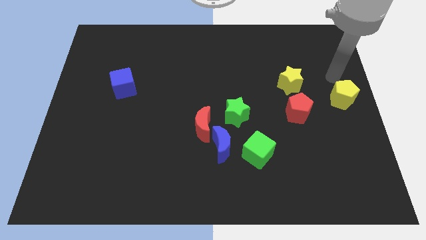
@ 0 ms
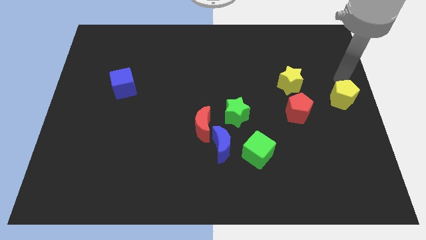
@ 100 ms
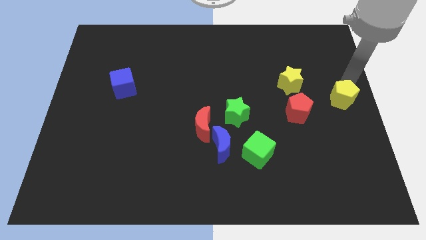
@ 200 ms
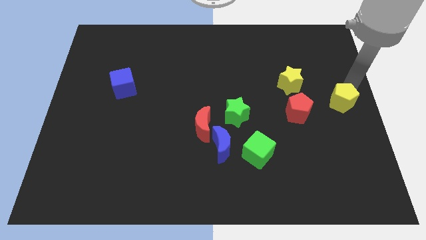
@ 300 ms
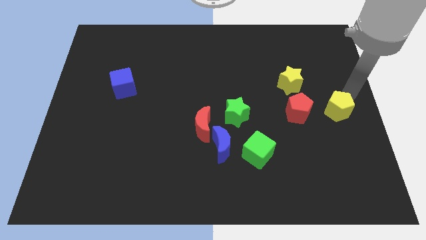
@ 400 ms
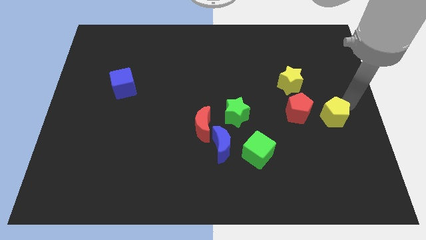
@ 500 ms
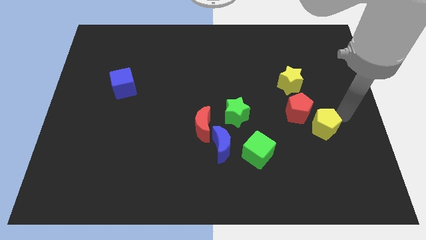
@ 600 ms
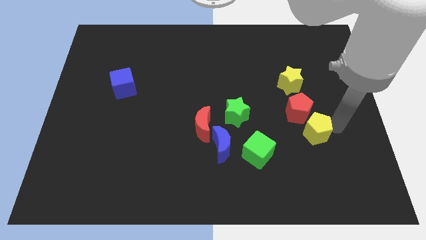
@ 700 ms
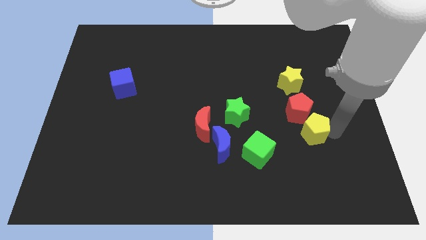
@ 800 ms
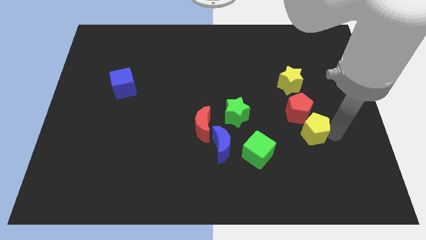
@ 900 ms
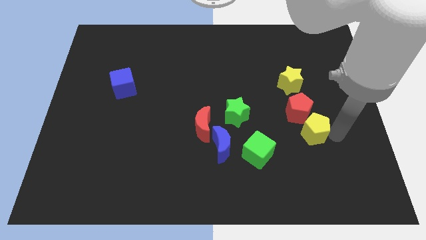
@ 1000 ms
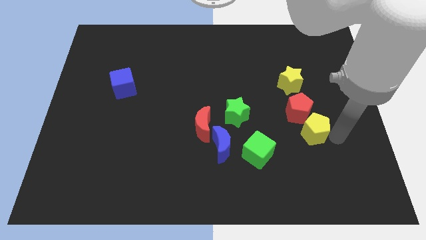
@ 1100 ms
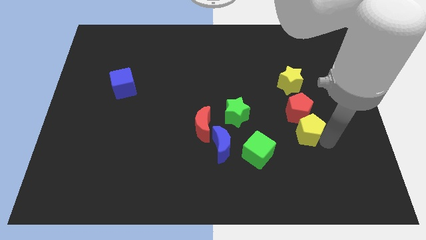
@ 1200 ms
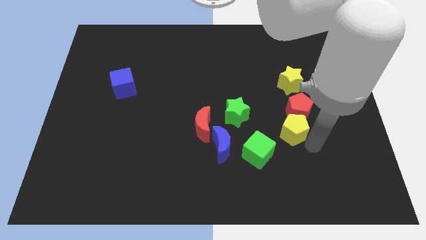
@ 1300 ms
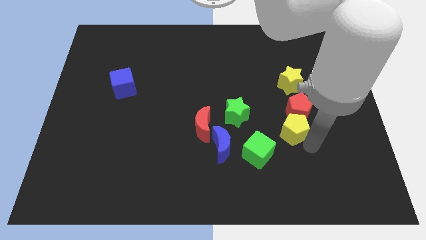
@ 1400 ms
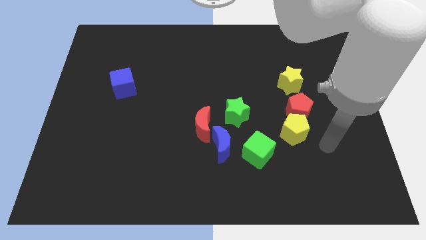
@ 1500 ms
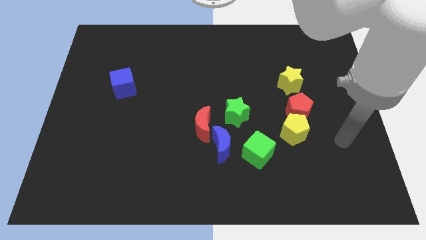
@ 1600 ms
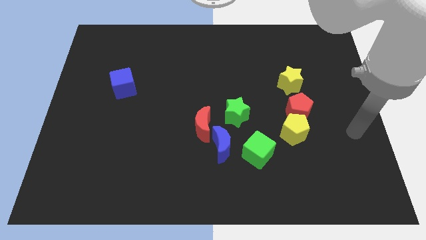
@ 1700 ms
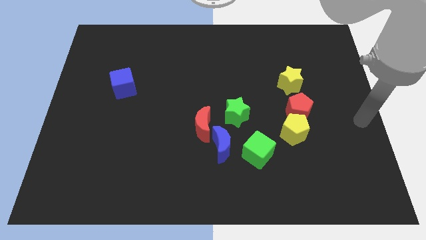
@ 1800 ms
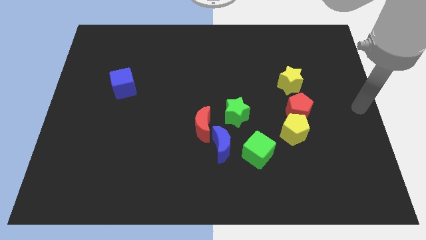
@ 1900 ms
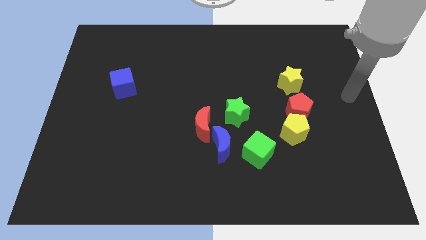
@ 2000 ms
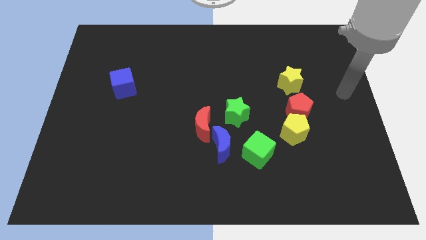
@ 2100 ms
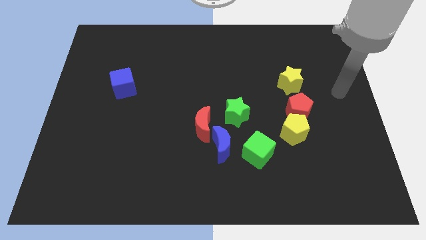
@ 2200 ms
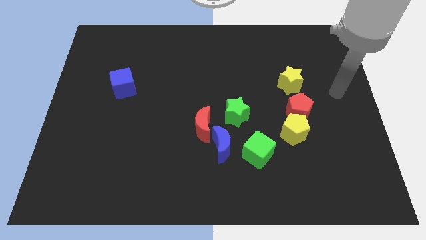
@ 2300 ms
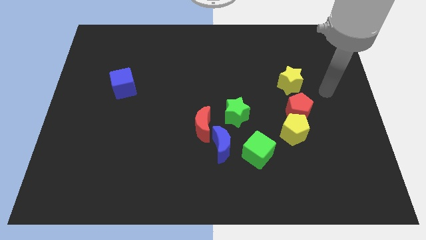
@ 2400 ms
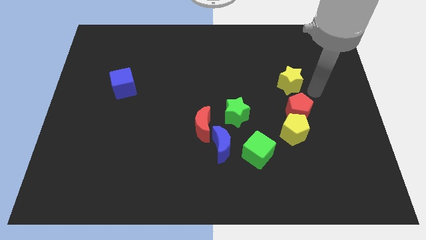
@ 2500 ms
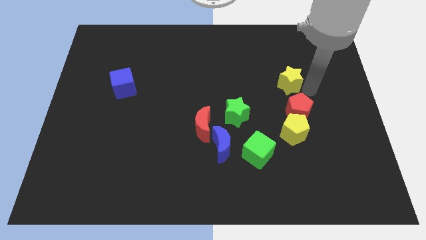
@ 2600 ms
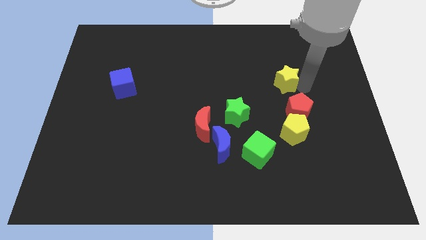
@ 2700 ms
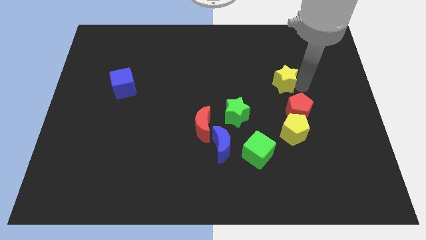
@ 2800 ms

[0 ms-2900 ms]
place the arm right to the yellow star

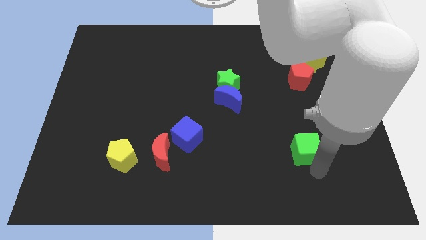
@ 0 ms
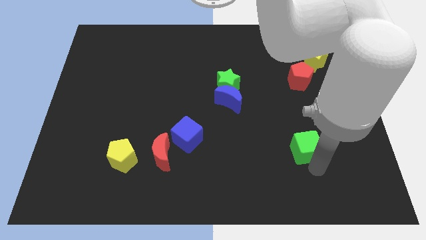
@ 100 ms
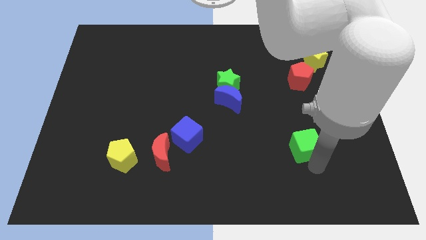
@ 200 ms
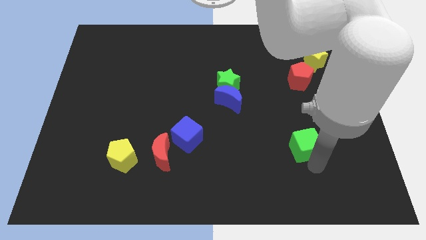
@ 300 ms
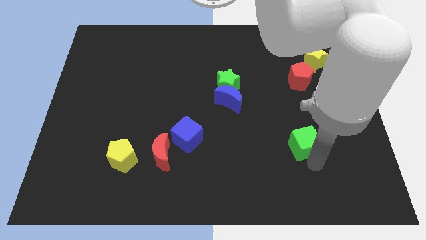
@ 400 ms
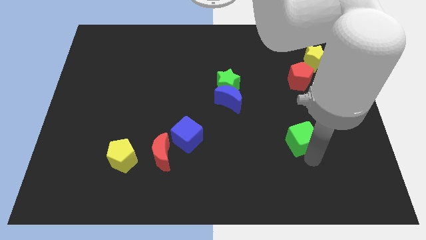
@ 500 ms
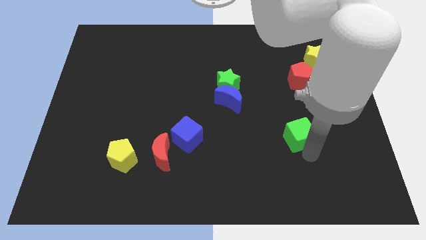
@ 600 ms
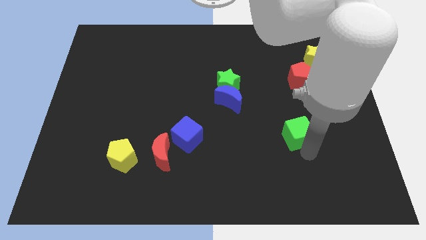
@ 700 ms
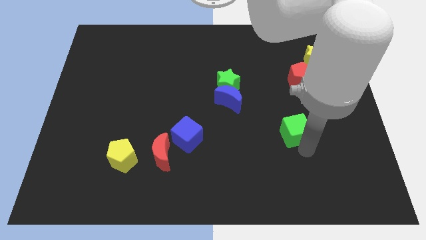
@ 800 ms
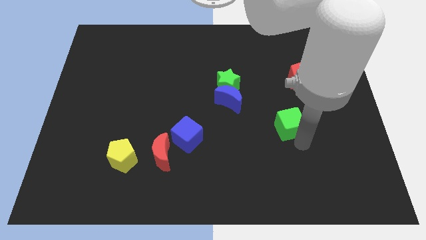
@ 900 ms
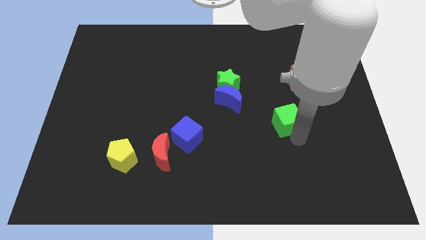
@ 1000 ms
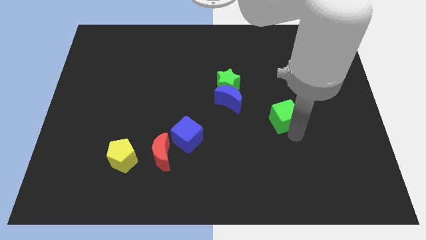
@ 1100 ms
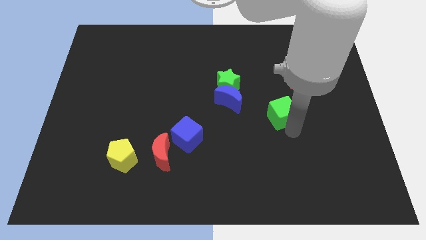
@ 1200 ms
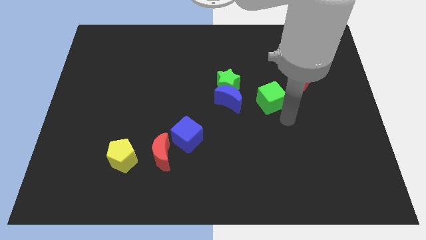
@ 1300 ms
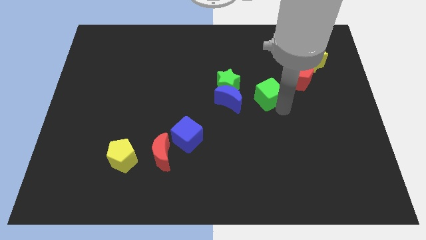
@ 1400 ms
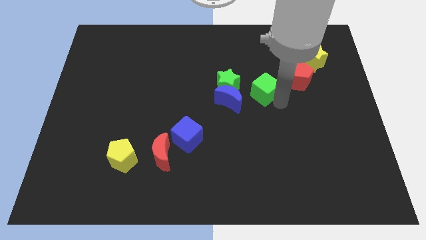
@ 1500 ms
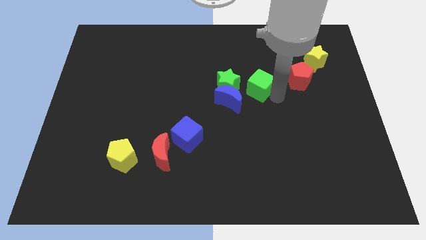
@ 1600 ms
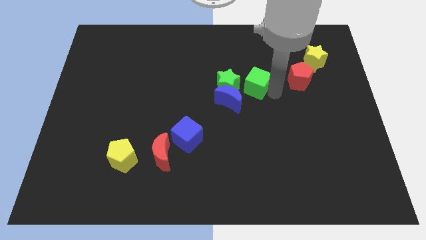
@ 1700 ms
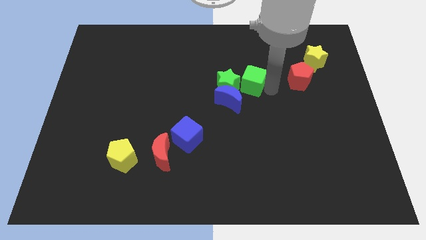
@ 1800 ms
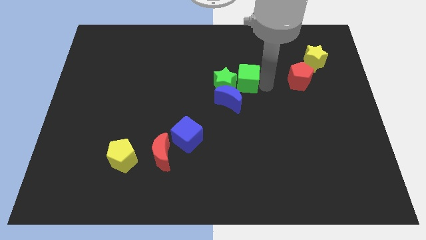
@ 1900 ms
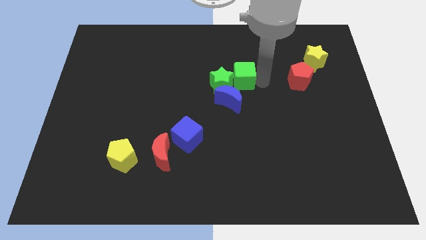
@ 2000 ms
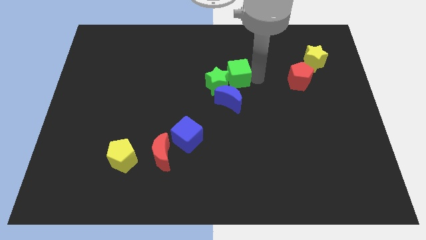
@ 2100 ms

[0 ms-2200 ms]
place green cube near to green star

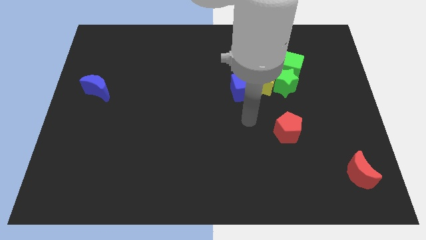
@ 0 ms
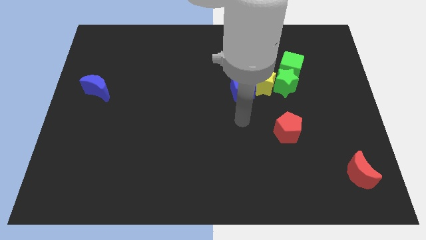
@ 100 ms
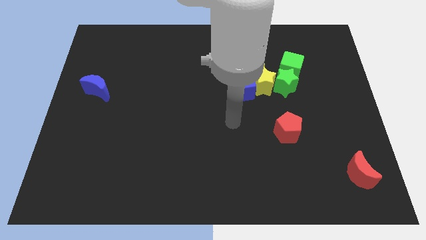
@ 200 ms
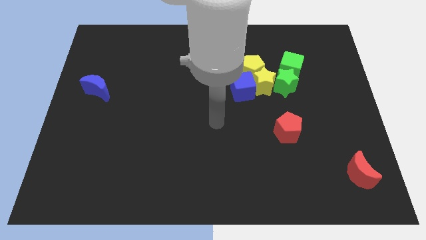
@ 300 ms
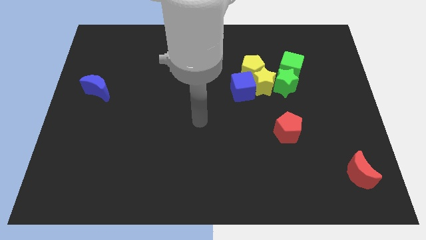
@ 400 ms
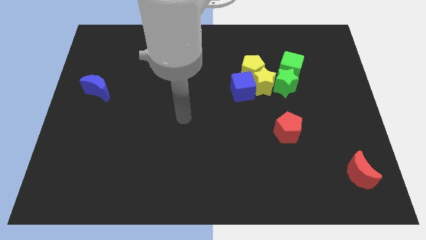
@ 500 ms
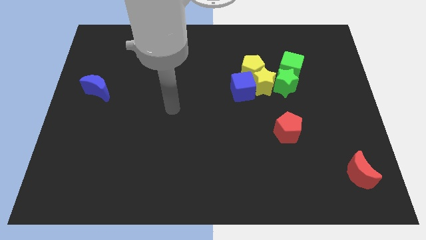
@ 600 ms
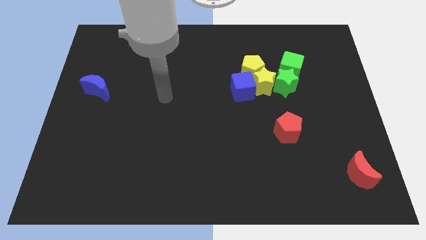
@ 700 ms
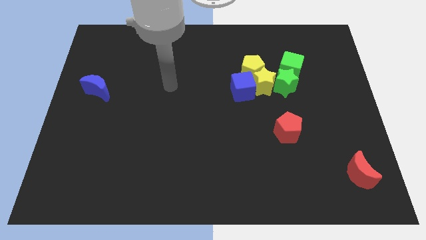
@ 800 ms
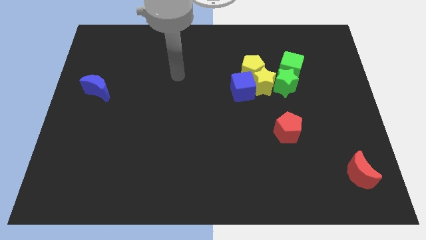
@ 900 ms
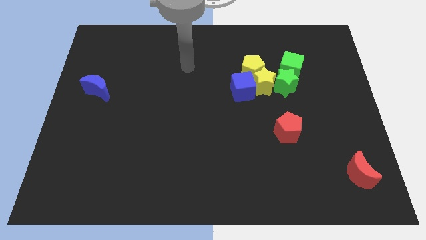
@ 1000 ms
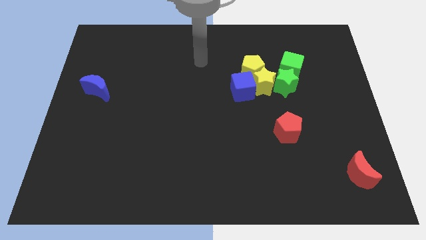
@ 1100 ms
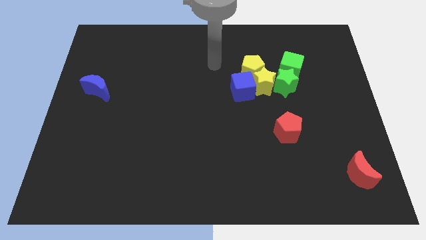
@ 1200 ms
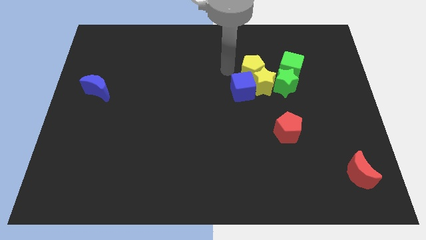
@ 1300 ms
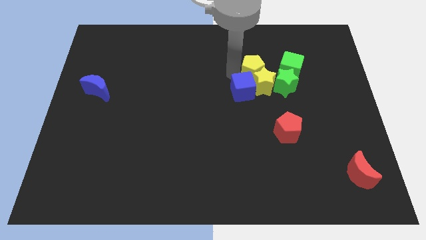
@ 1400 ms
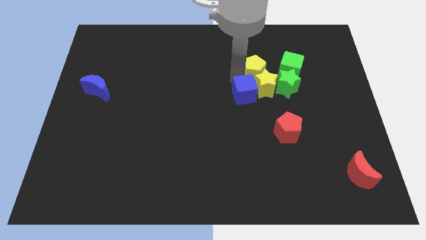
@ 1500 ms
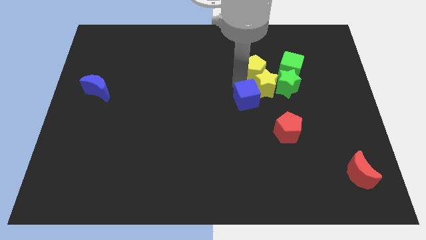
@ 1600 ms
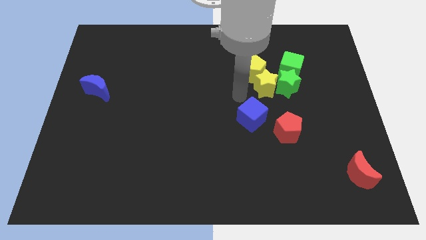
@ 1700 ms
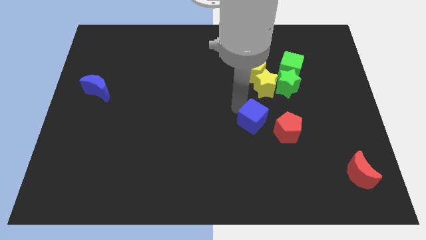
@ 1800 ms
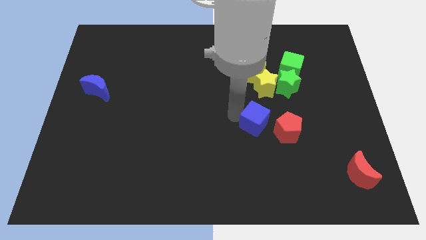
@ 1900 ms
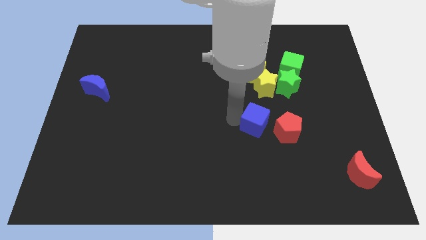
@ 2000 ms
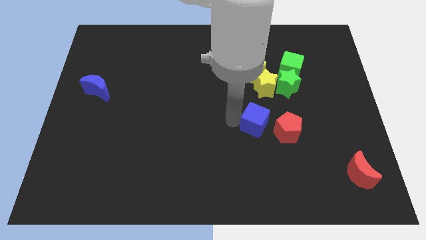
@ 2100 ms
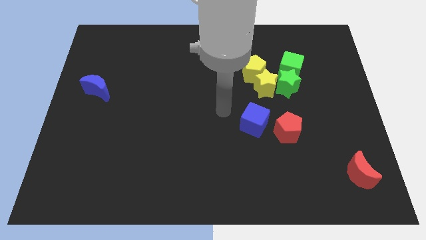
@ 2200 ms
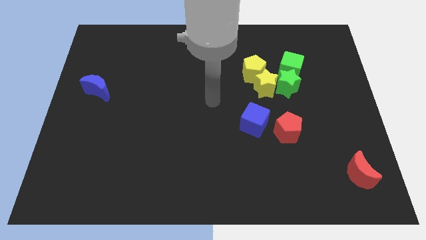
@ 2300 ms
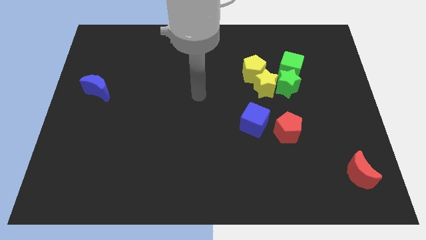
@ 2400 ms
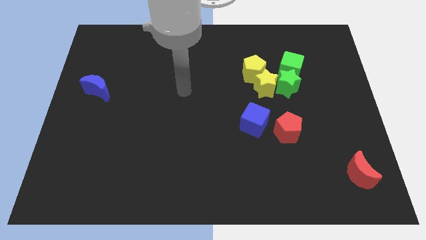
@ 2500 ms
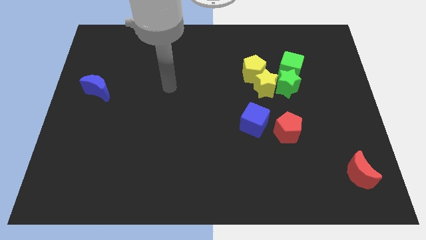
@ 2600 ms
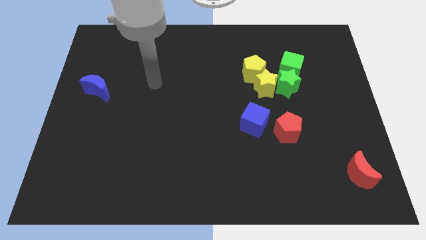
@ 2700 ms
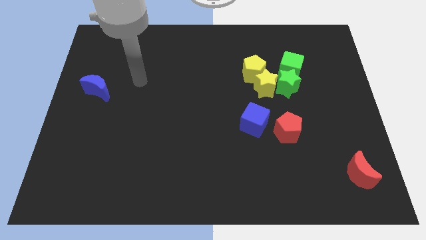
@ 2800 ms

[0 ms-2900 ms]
place the blue cube to the left of the red pentagon

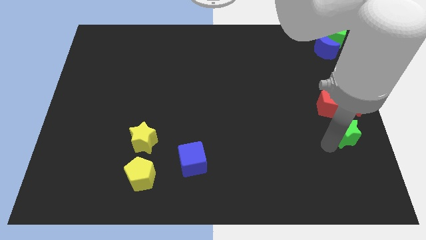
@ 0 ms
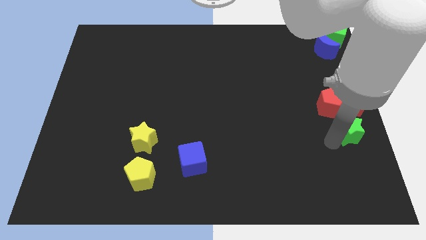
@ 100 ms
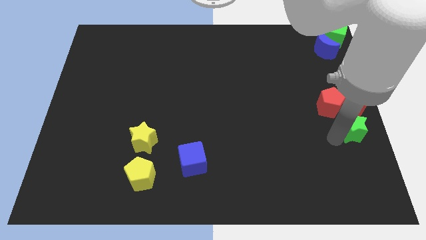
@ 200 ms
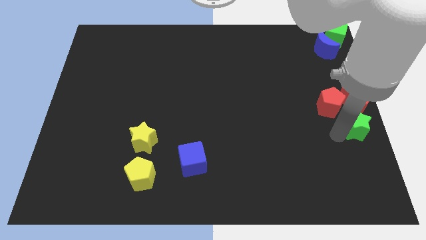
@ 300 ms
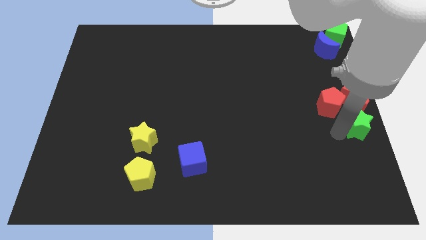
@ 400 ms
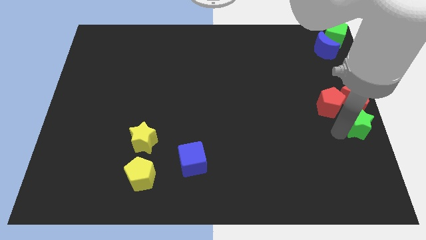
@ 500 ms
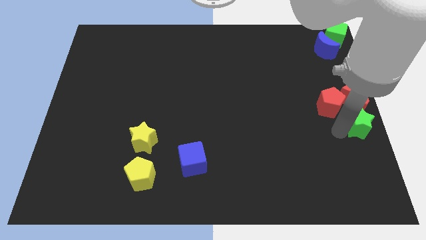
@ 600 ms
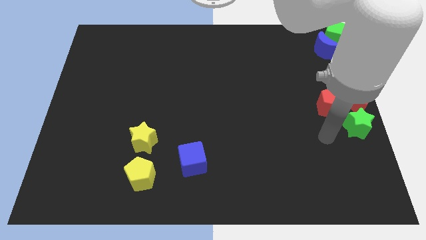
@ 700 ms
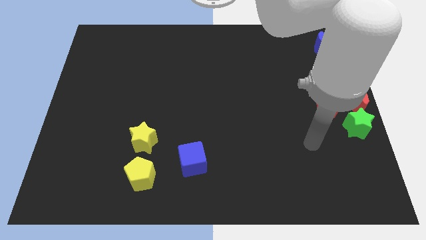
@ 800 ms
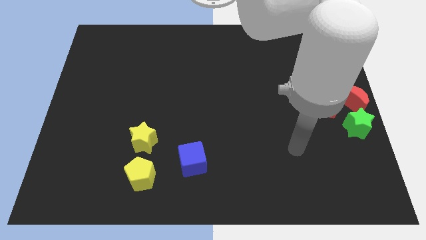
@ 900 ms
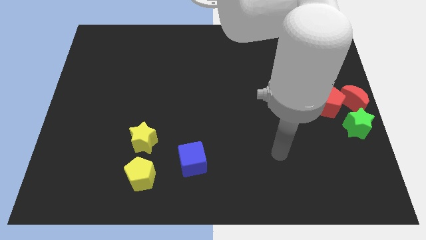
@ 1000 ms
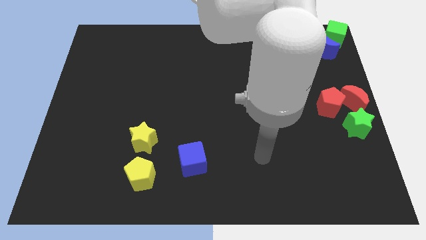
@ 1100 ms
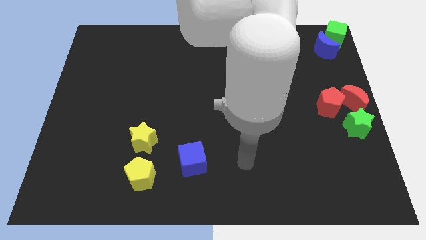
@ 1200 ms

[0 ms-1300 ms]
place the green star below the red crescent
